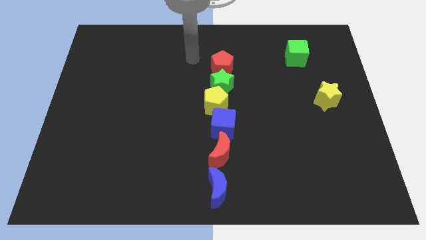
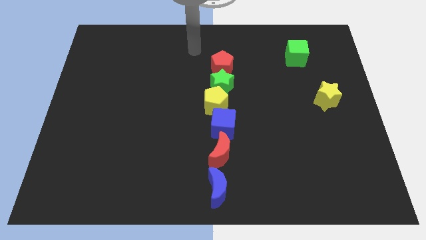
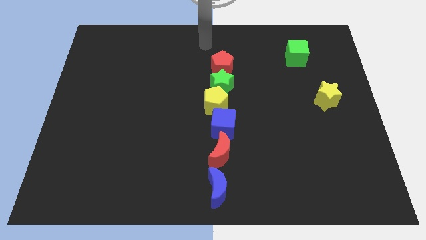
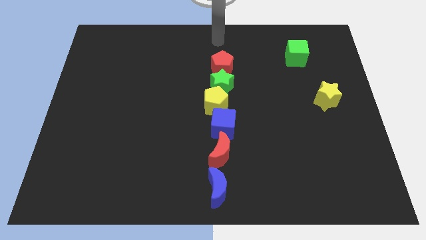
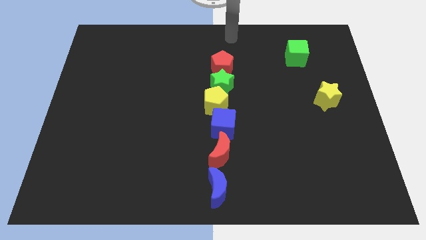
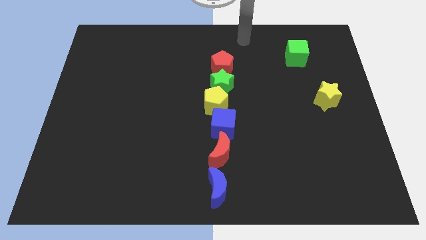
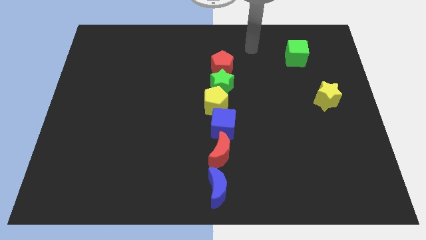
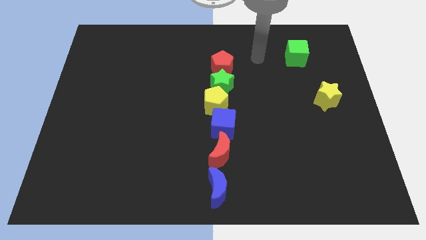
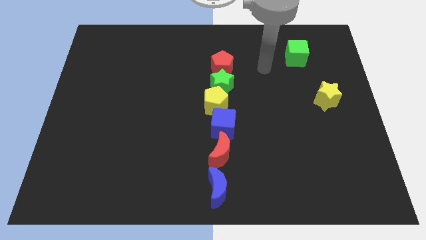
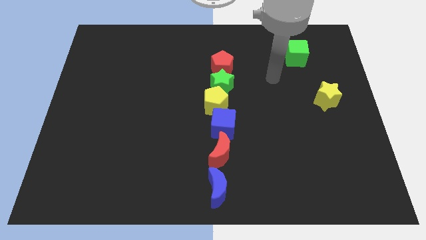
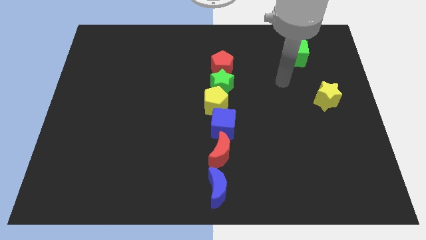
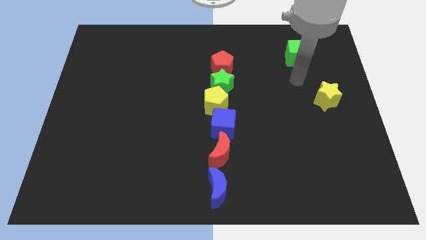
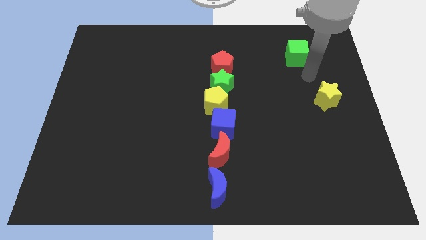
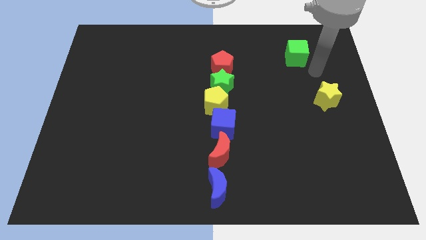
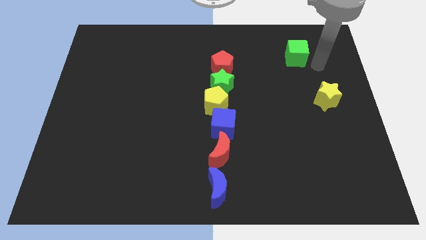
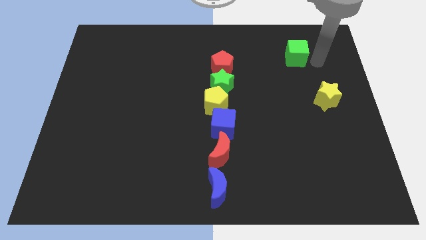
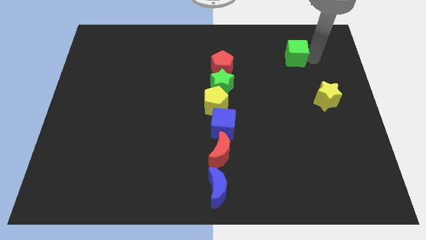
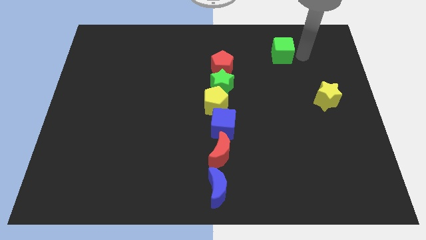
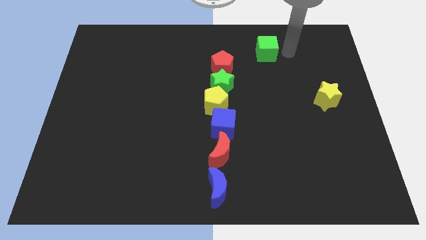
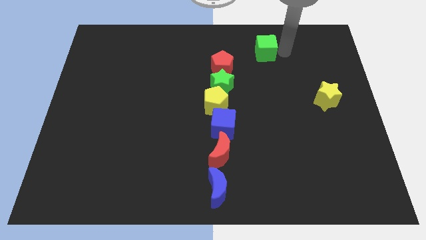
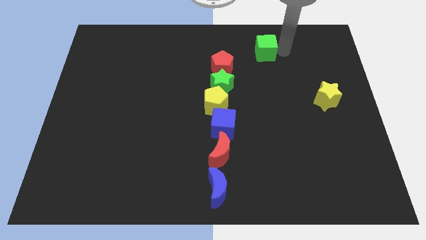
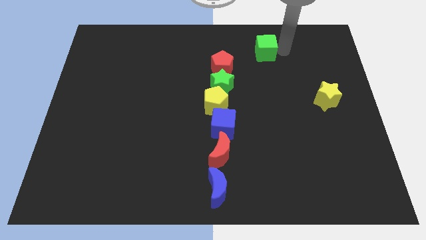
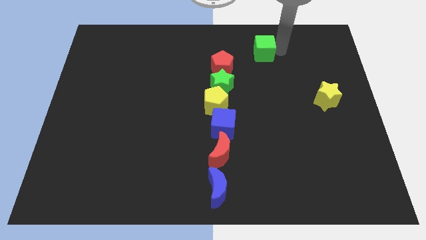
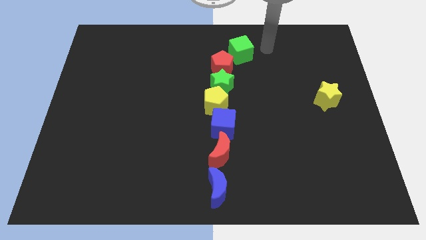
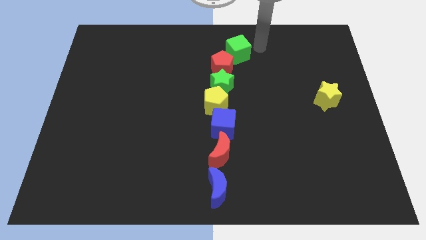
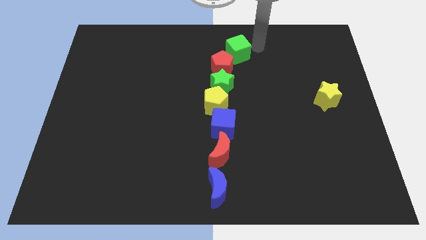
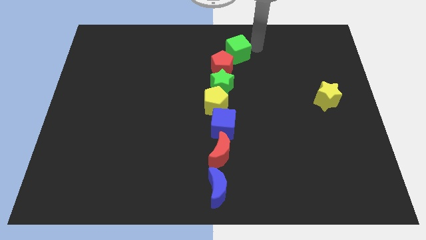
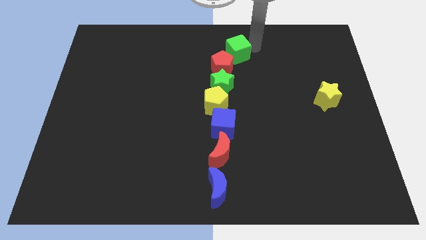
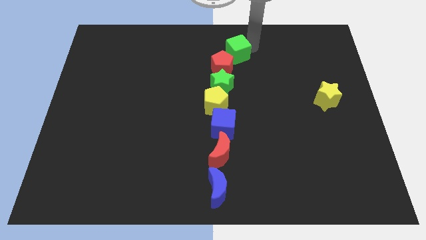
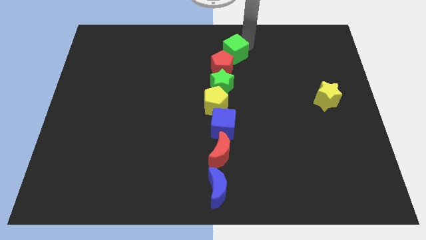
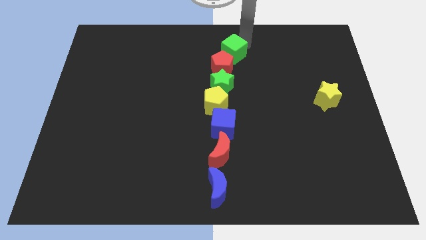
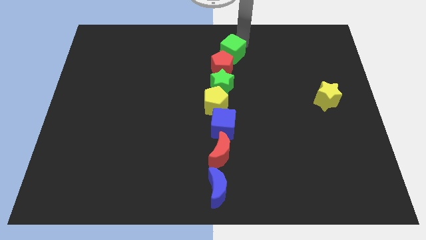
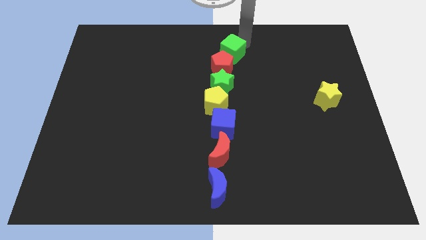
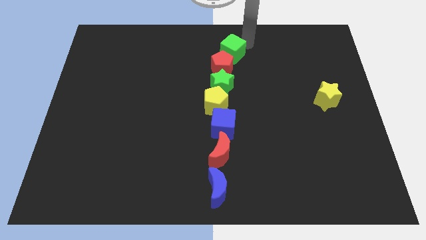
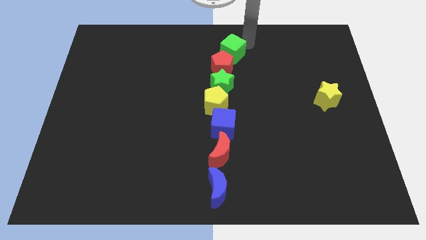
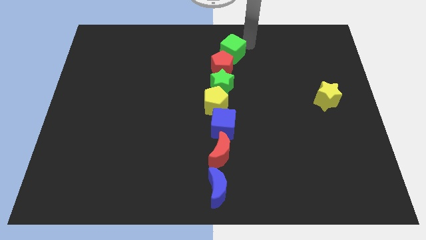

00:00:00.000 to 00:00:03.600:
push the green cube towards the left side of the board

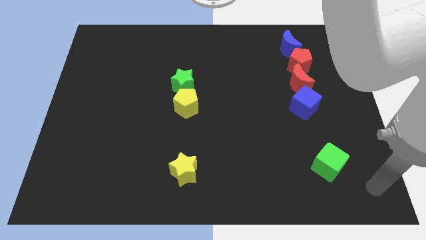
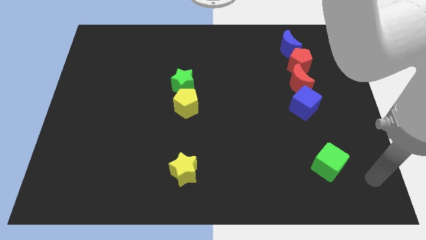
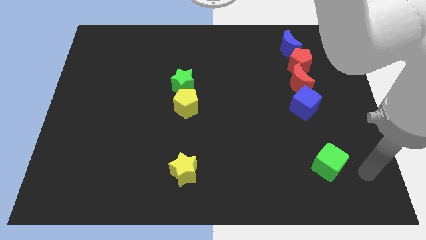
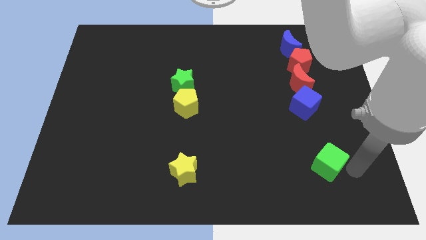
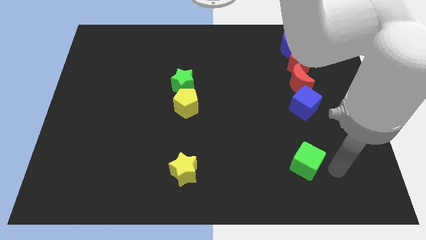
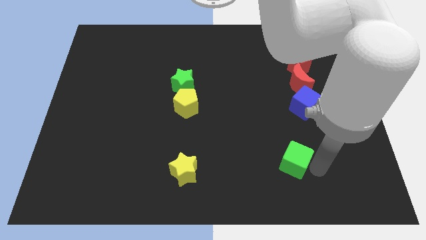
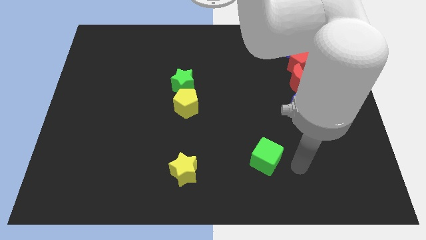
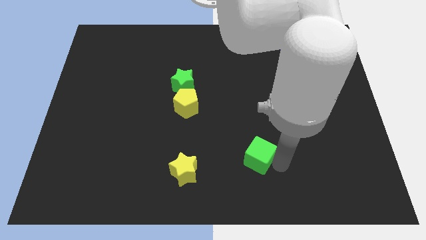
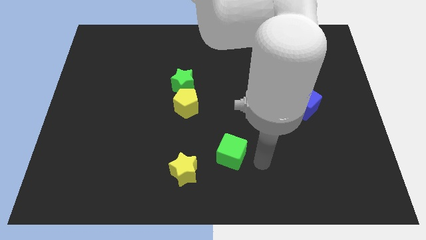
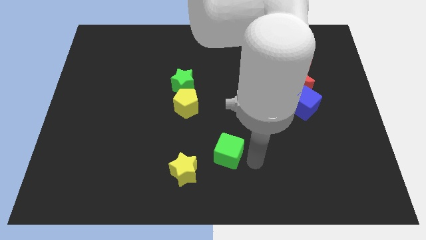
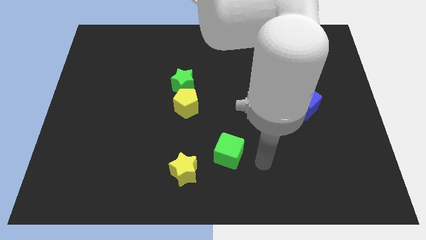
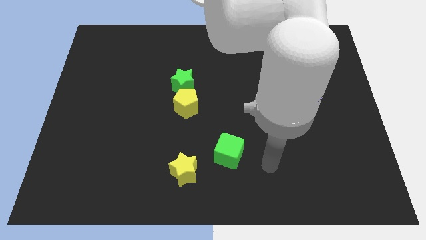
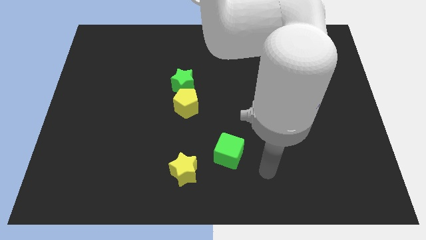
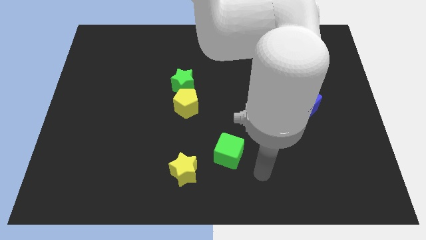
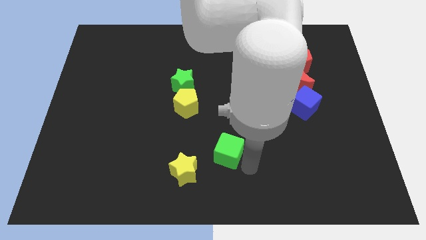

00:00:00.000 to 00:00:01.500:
move the green cube slightly towards the yellow star

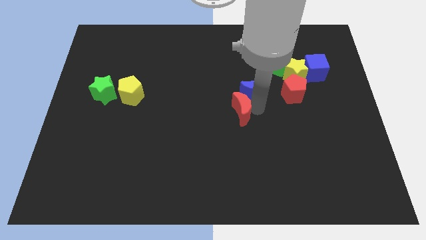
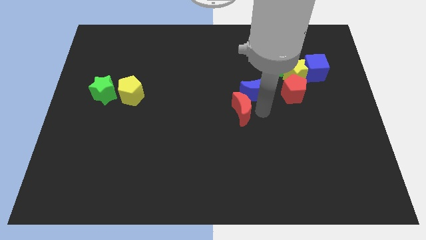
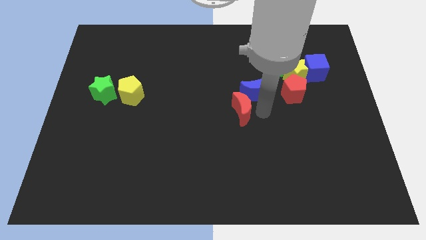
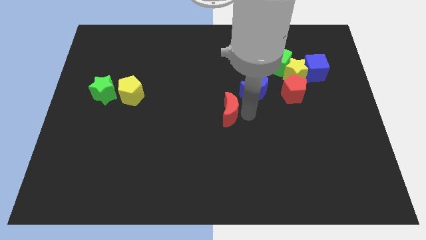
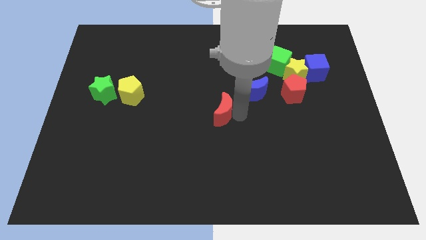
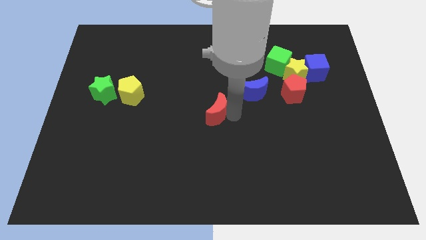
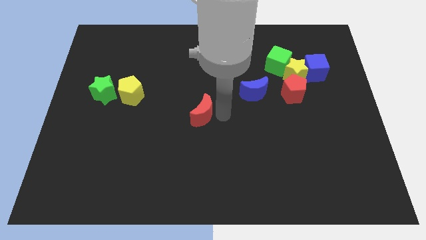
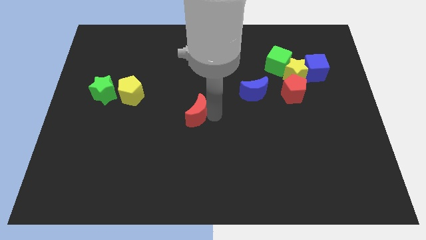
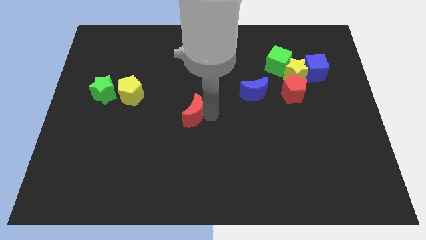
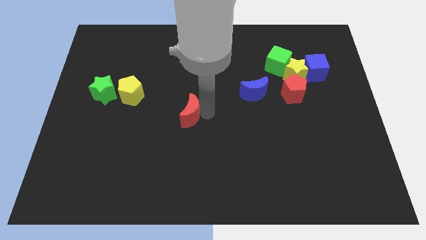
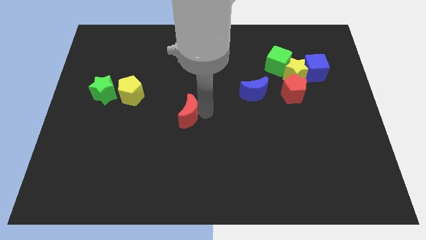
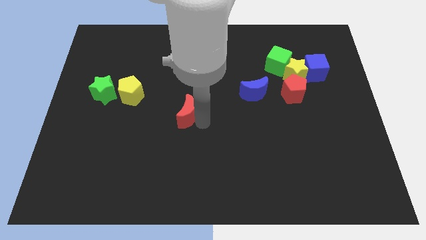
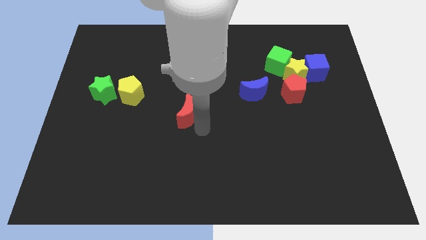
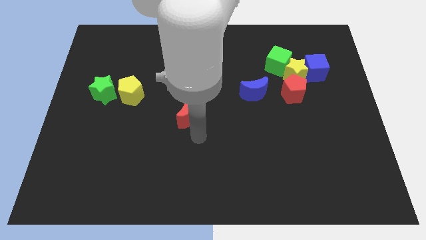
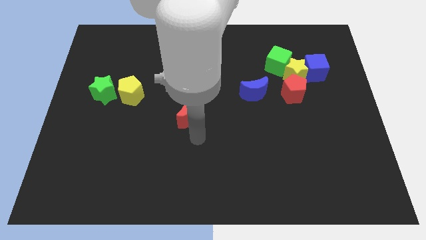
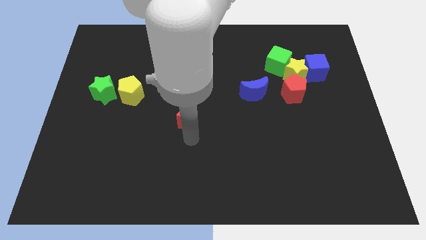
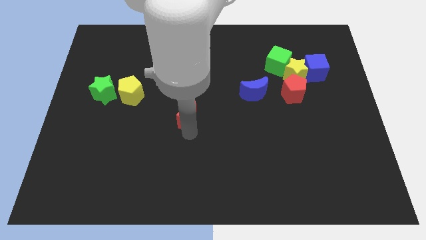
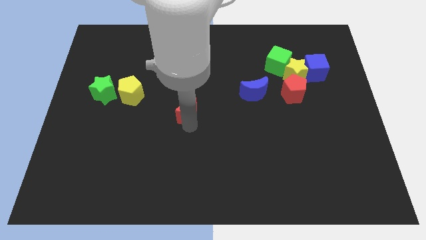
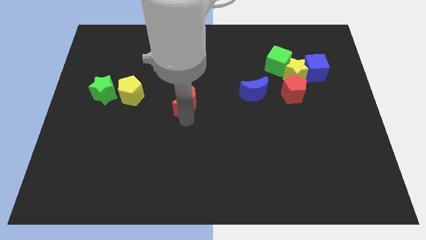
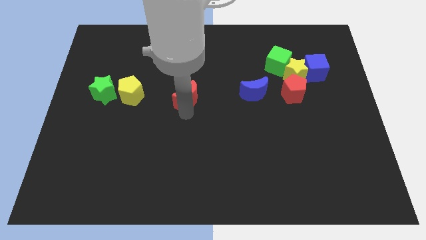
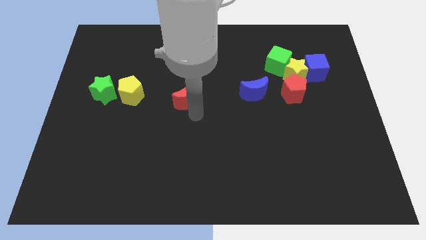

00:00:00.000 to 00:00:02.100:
place the red moon in between the yellow pentagon and blue moon

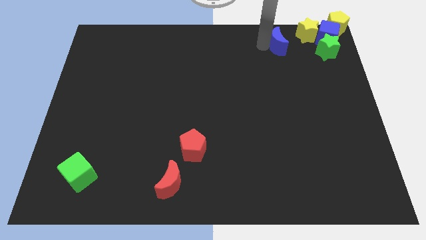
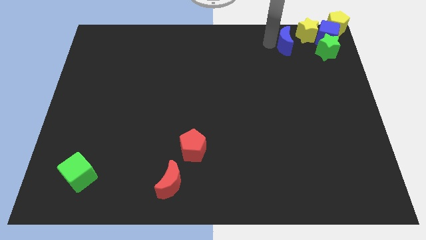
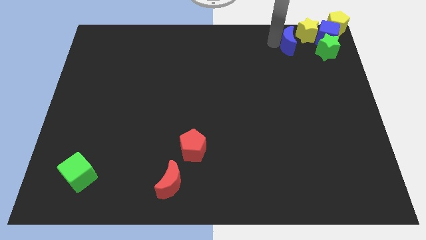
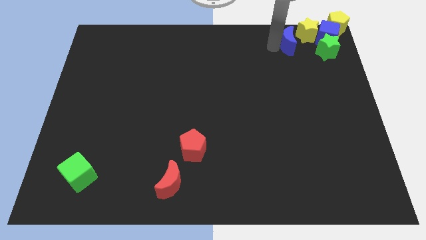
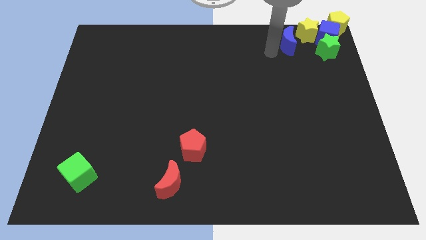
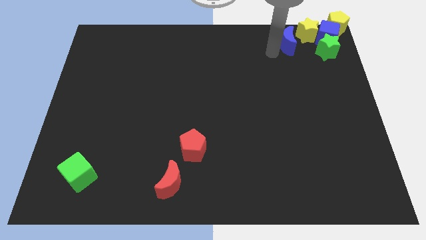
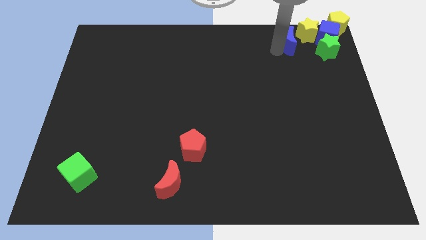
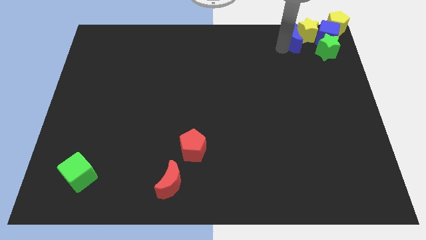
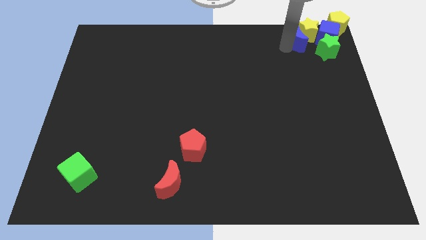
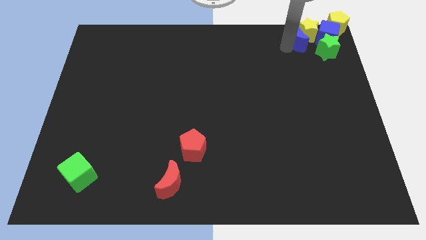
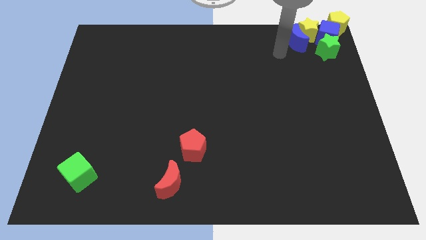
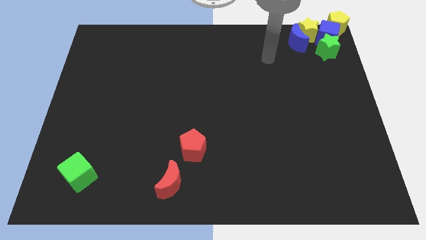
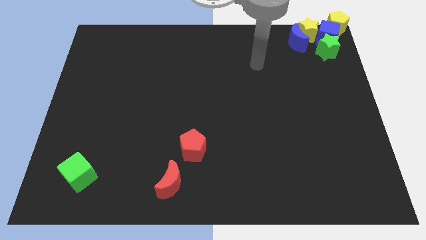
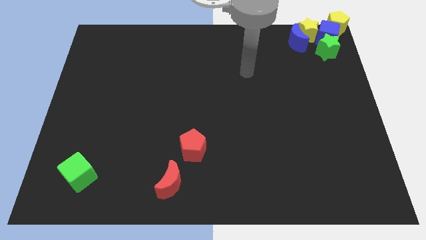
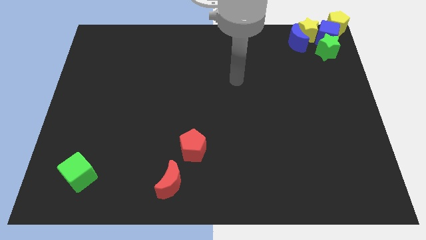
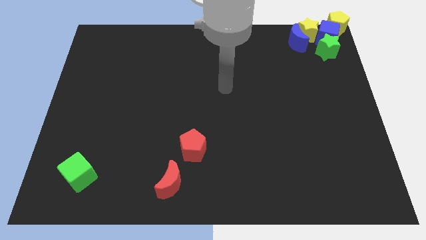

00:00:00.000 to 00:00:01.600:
move the blue moon into the yellow star

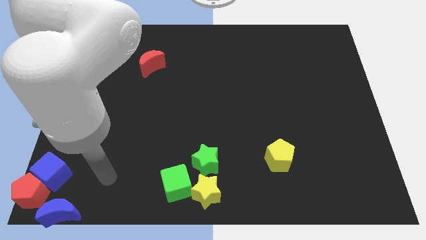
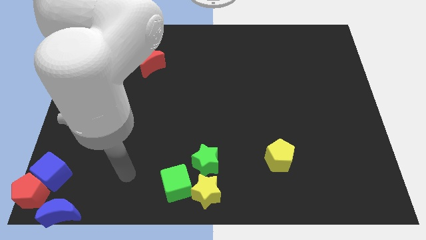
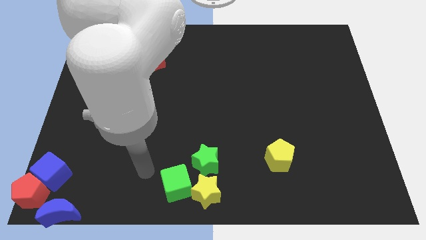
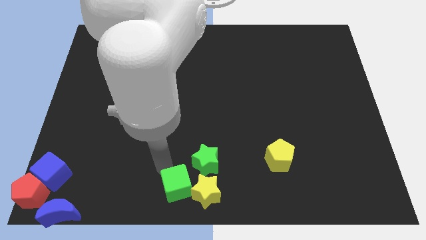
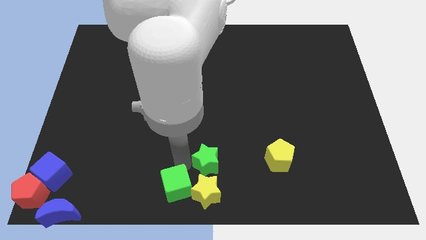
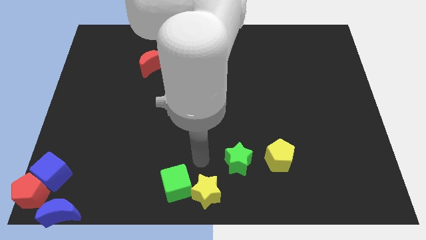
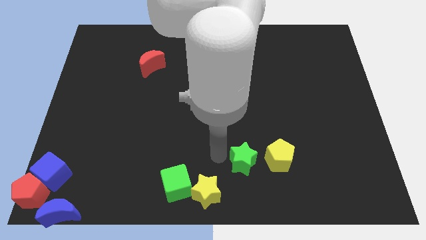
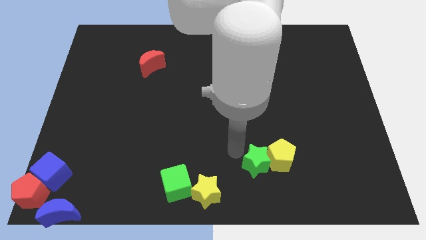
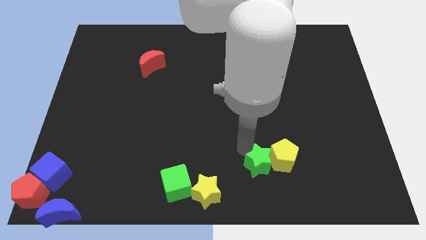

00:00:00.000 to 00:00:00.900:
push green star in to yellow pentagon
